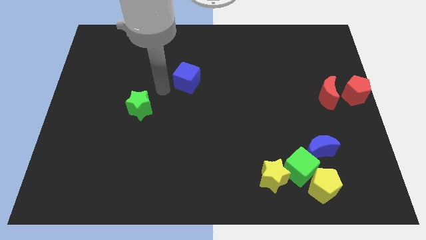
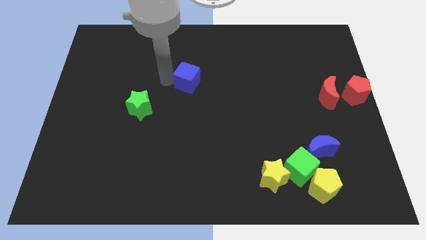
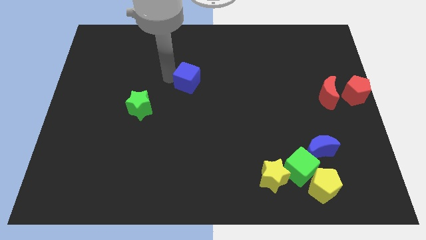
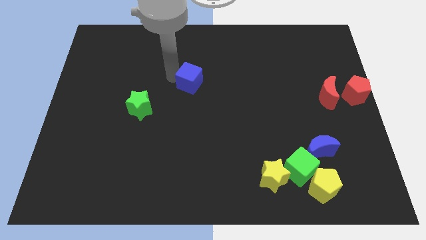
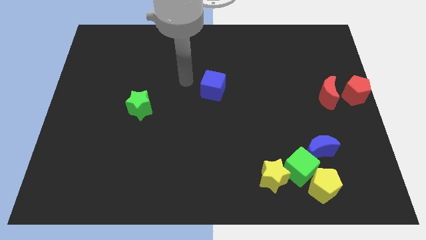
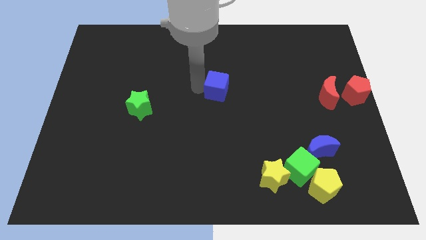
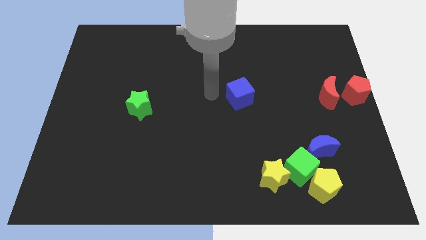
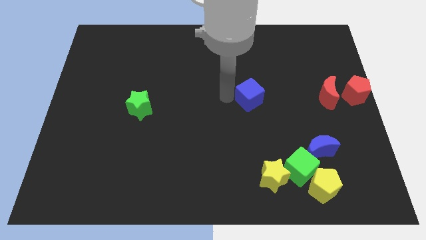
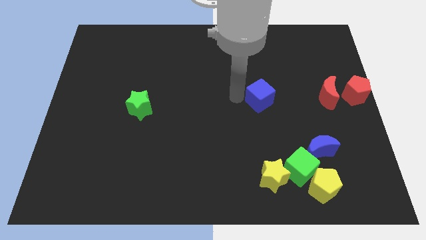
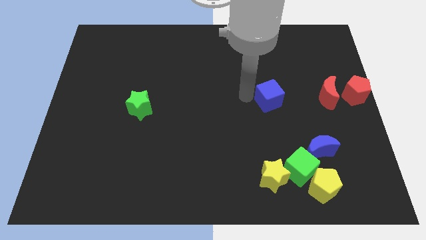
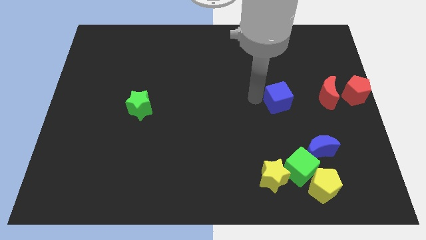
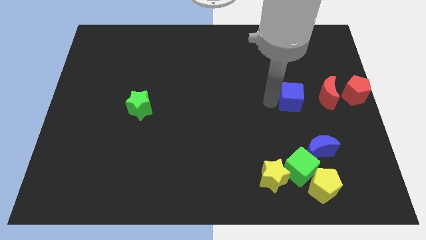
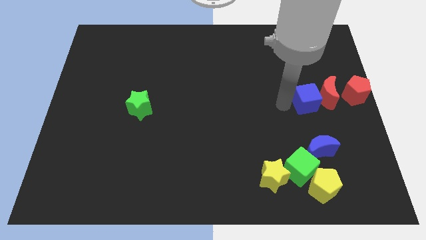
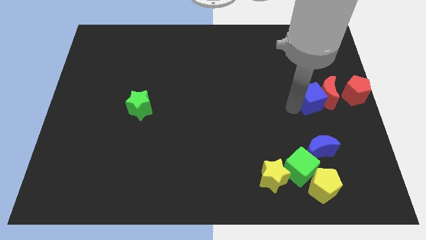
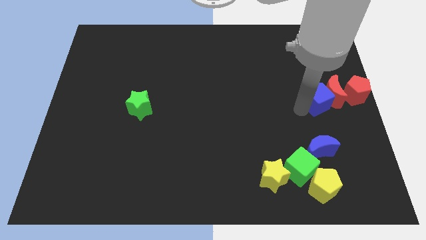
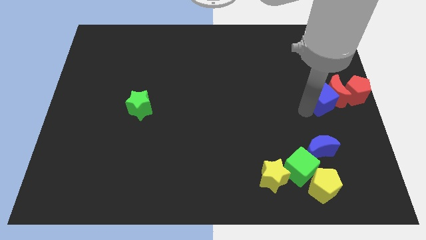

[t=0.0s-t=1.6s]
slide the blue cube into the red moon

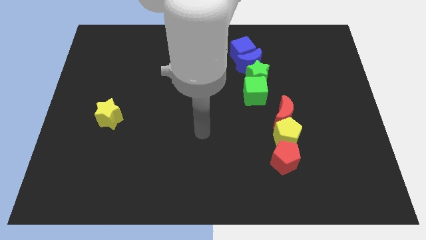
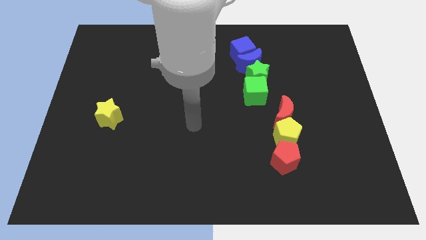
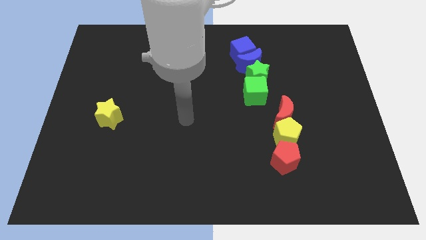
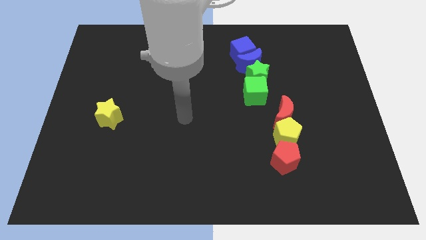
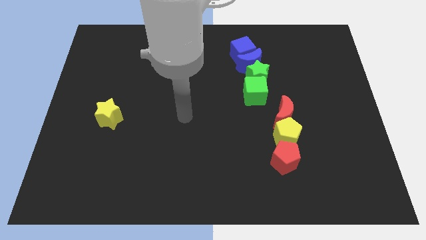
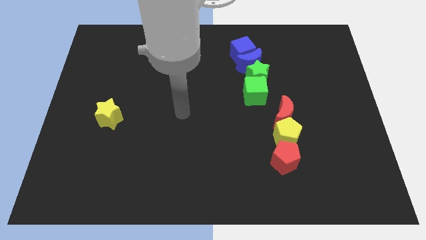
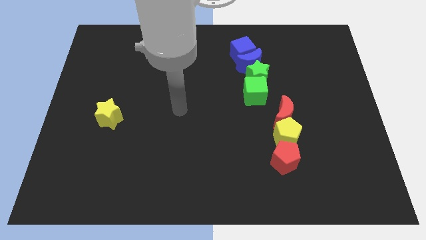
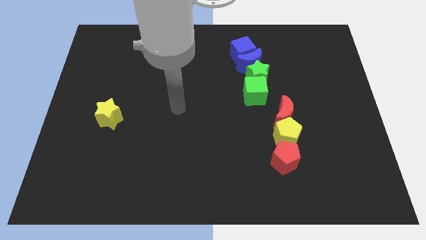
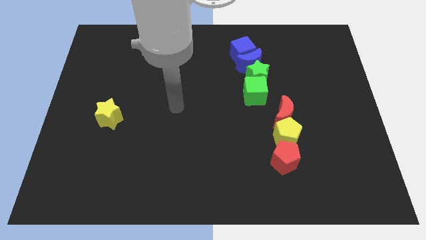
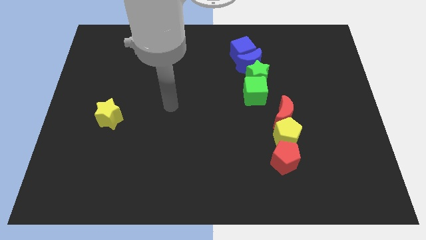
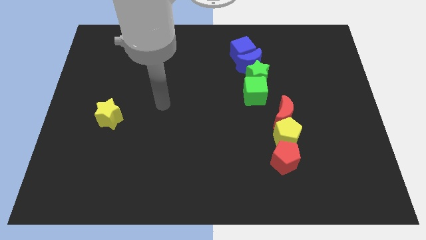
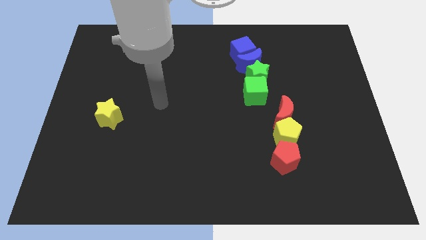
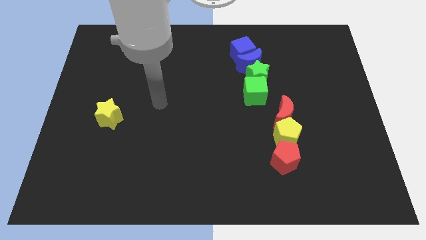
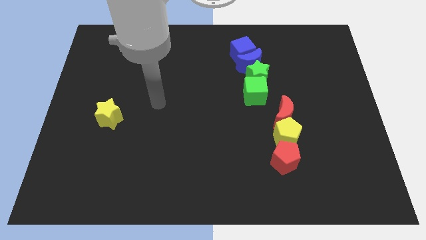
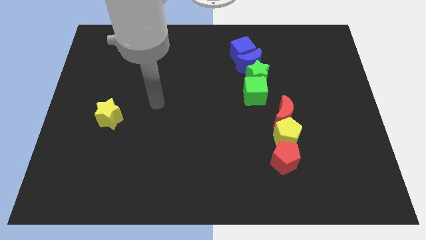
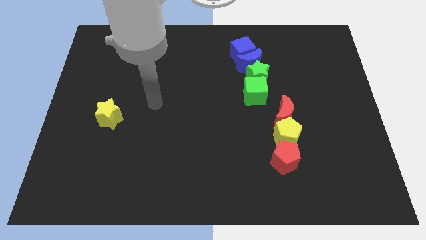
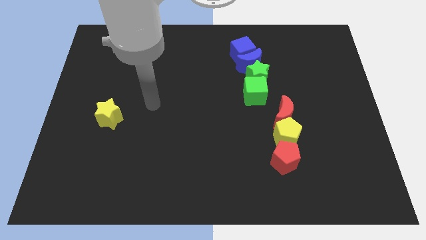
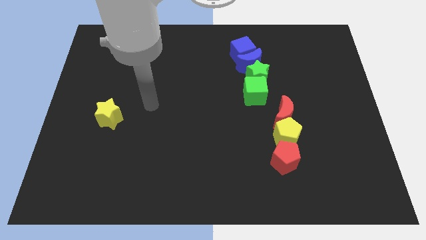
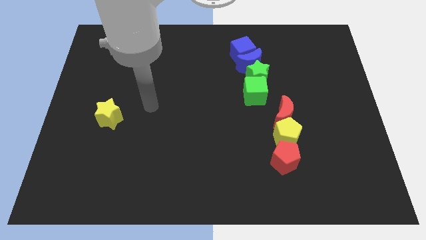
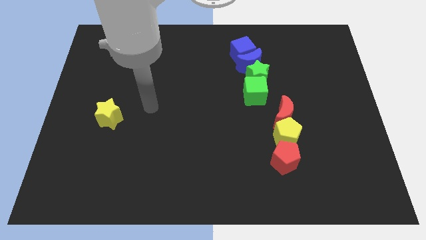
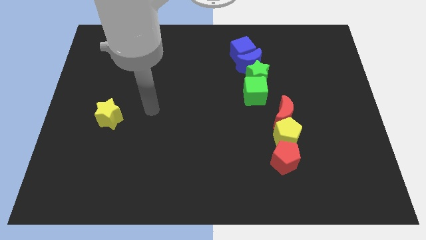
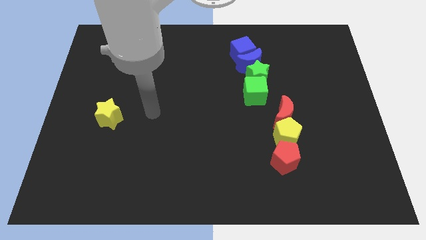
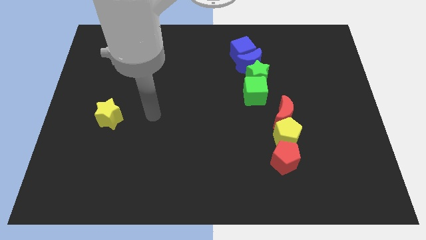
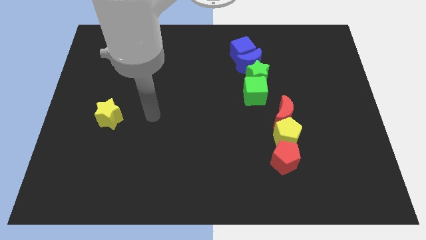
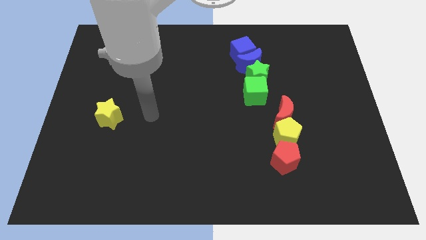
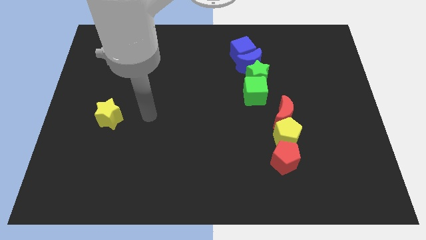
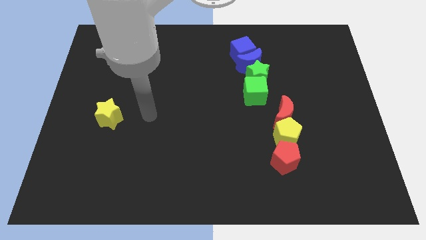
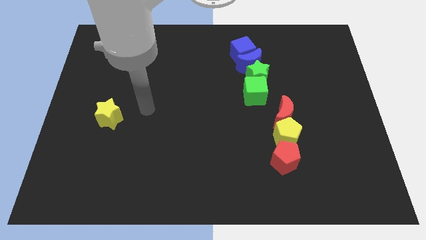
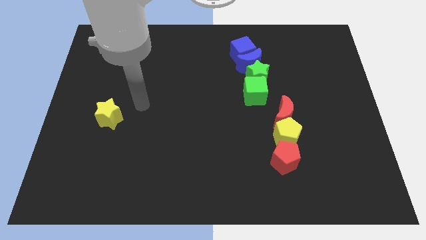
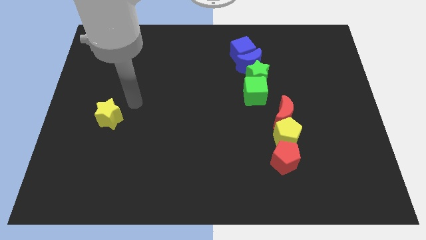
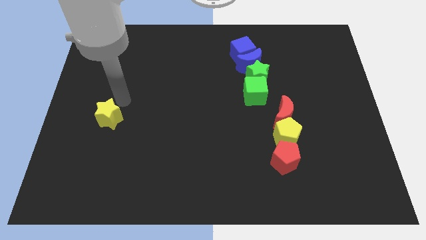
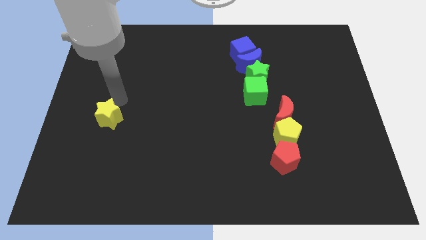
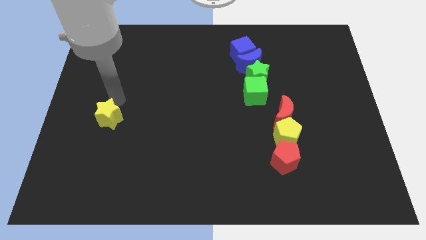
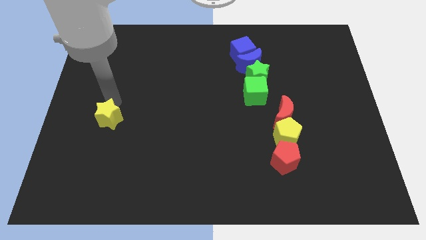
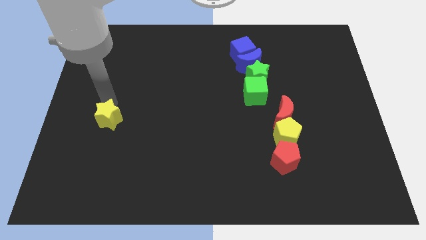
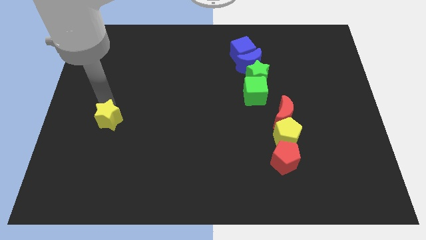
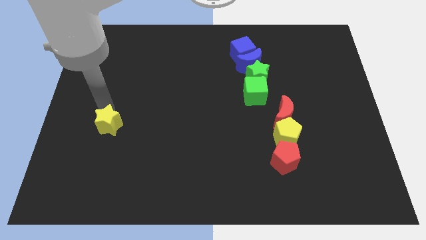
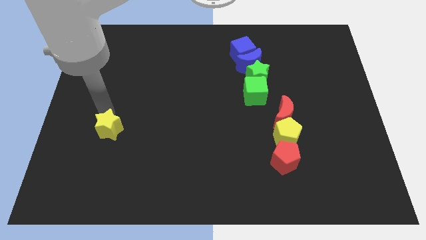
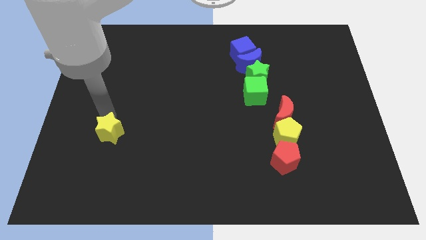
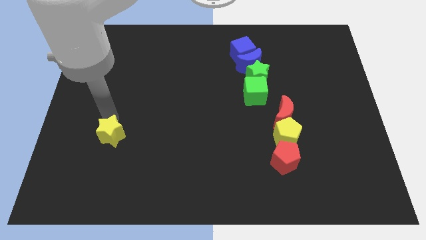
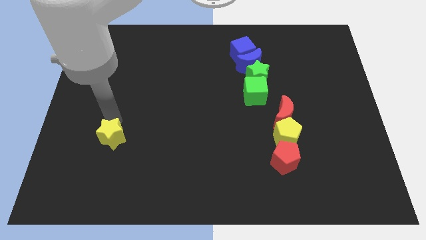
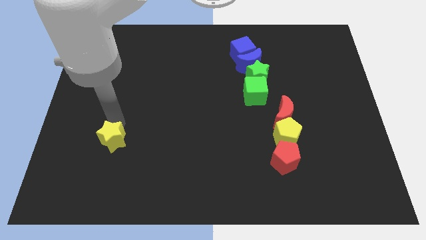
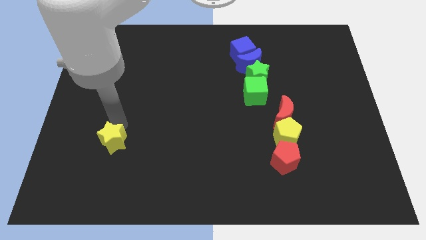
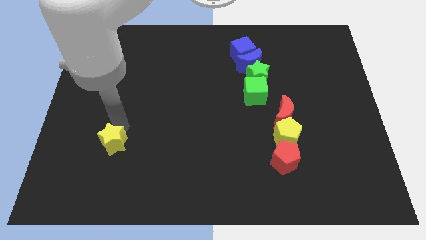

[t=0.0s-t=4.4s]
slightly move the yellow star to the bottom of the board

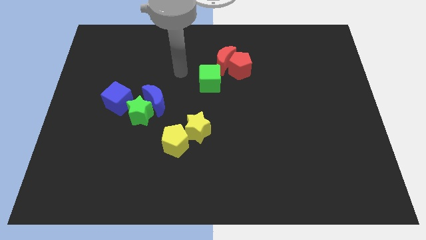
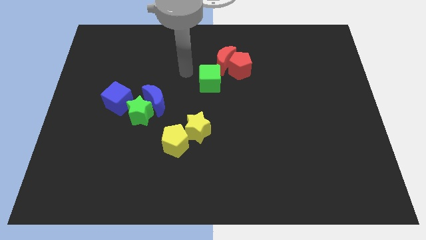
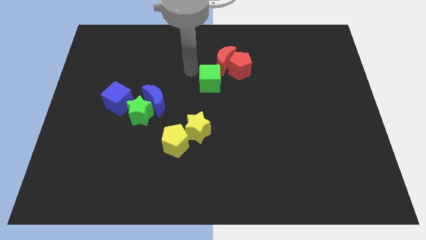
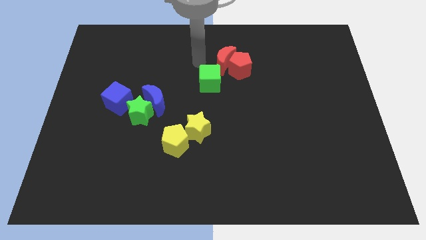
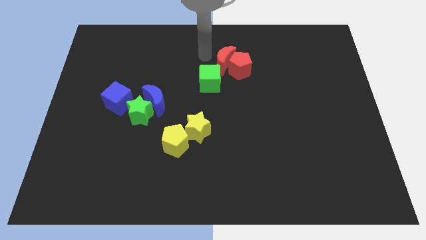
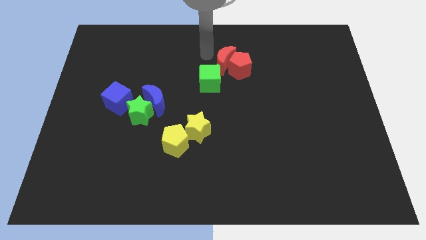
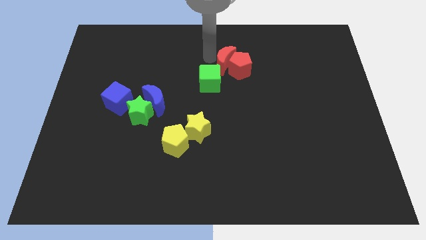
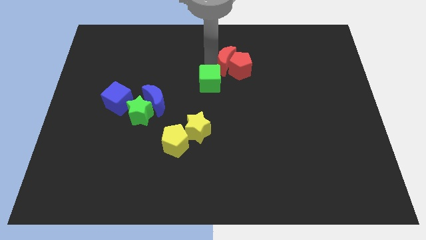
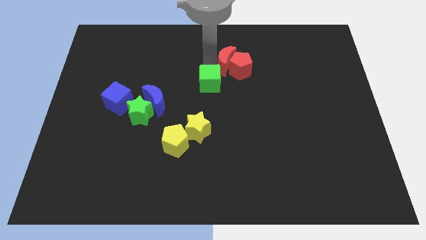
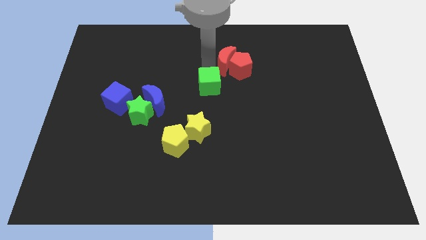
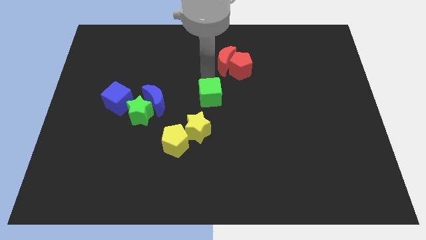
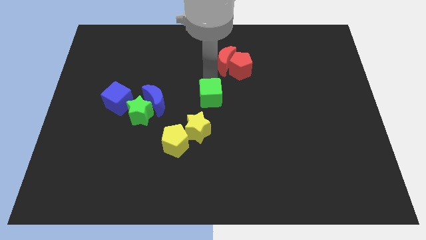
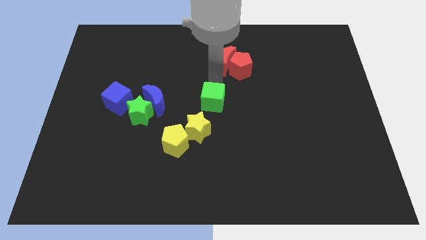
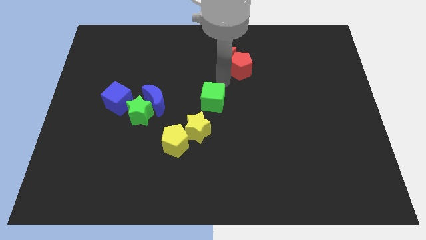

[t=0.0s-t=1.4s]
separate the green cube from the red crescent

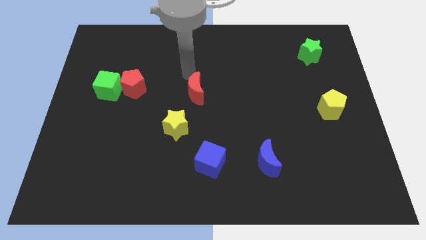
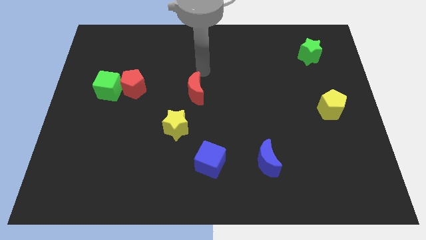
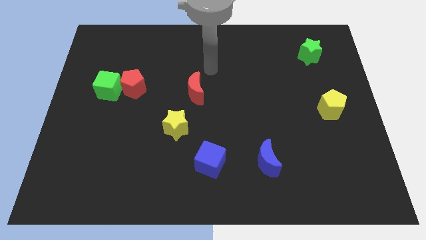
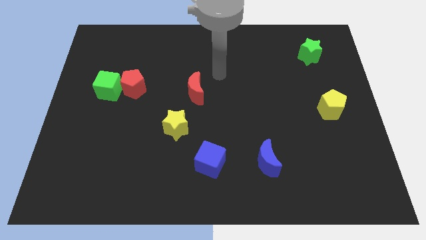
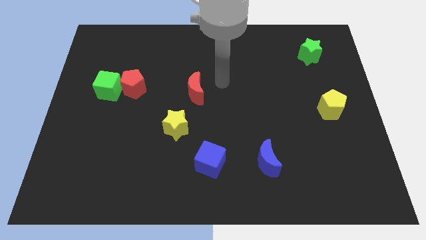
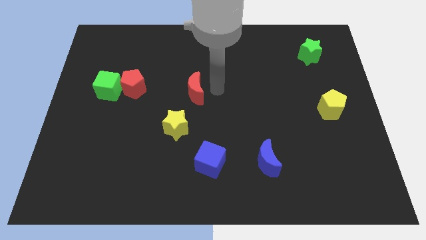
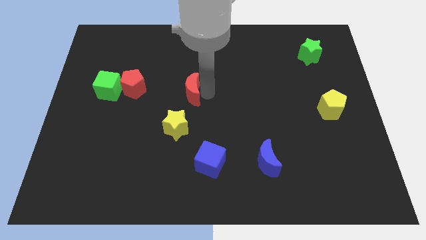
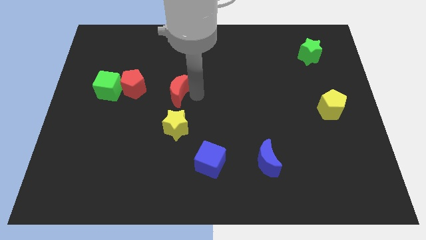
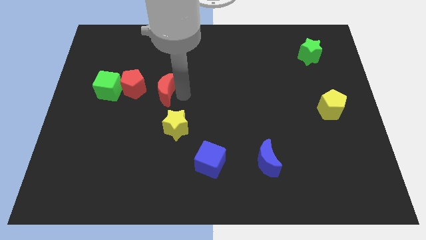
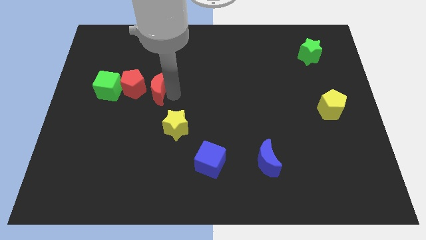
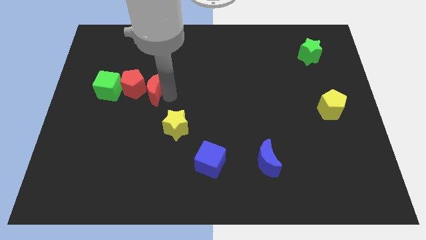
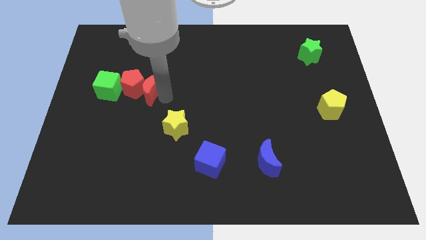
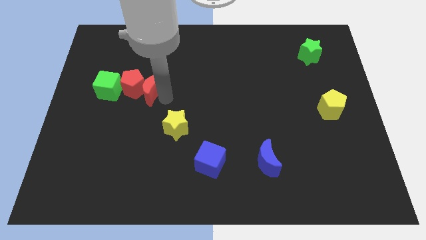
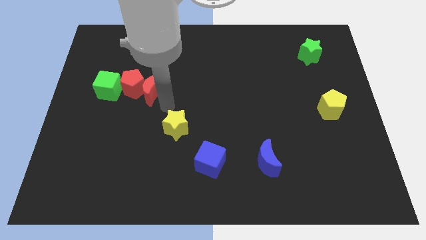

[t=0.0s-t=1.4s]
place the red moon right to the red pentagon

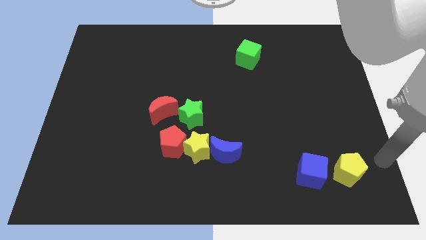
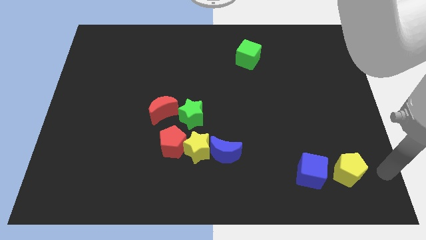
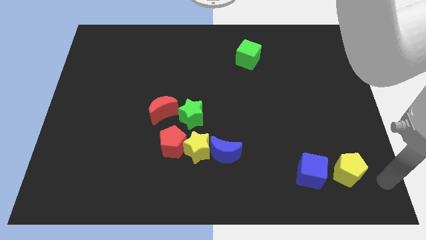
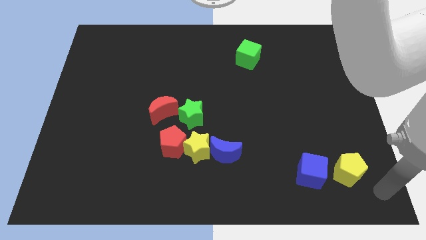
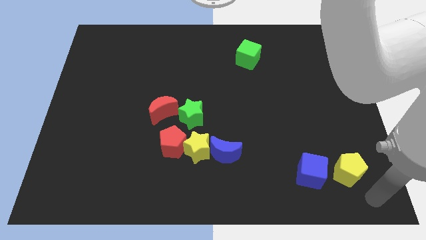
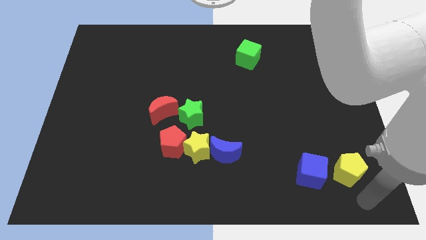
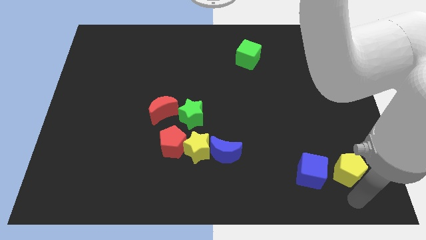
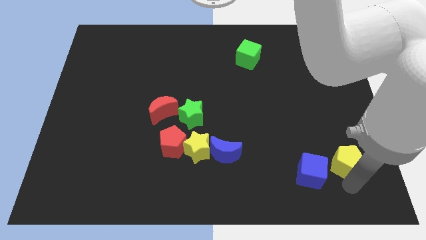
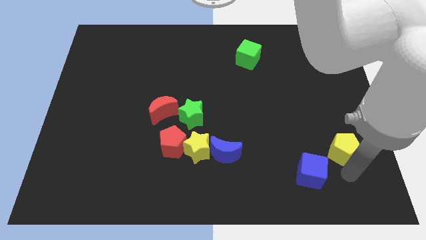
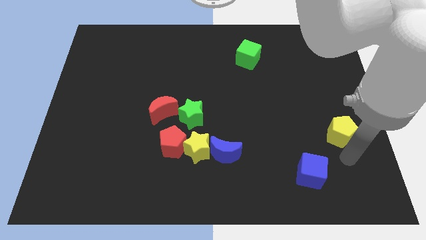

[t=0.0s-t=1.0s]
put the yellow pentagon diagonally at the top right of the blue cube
